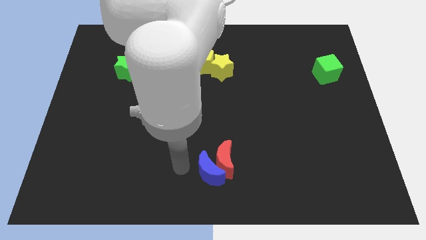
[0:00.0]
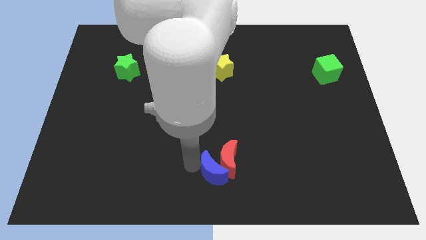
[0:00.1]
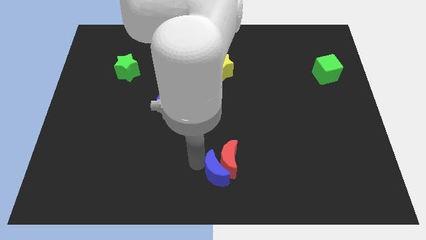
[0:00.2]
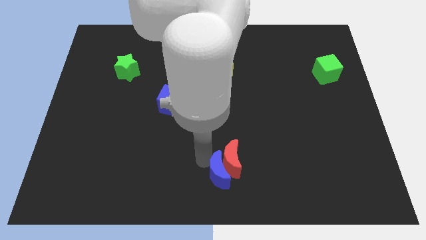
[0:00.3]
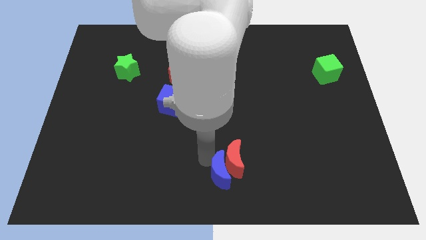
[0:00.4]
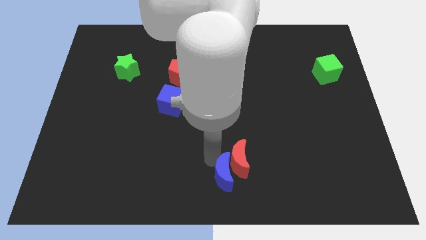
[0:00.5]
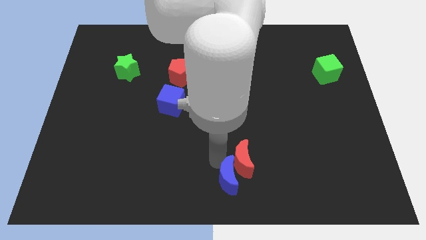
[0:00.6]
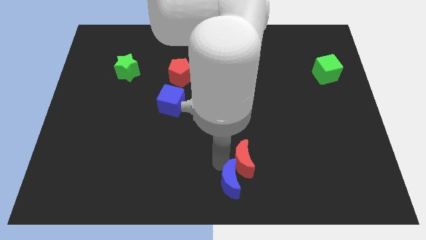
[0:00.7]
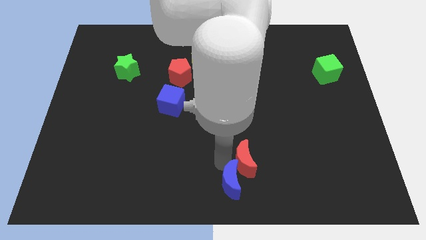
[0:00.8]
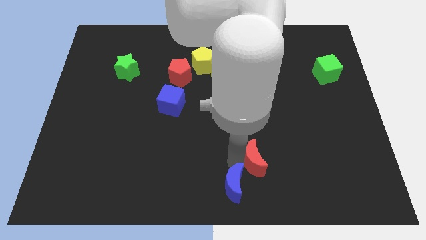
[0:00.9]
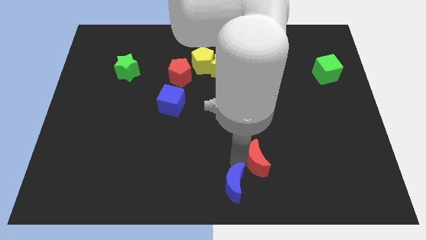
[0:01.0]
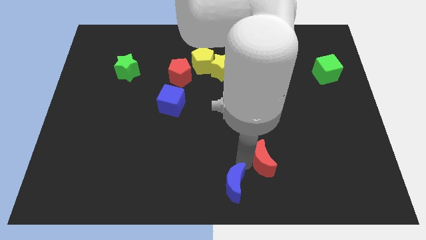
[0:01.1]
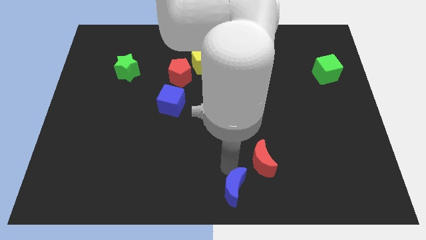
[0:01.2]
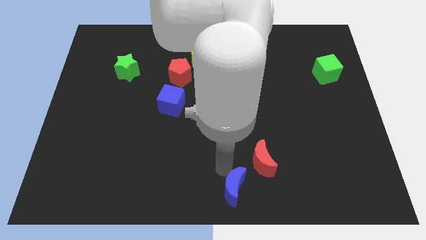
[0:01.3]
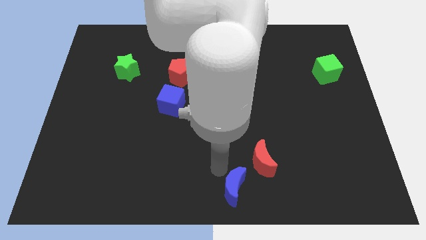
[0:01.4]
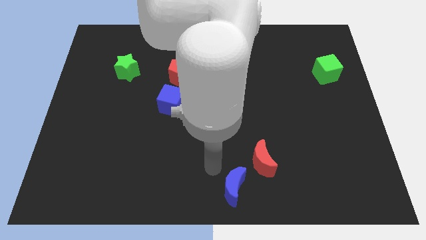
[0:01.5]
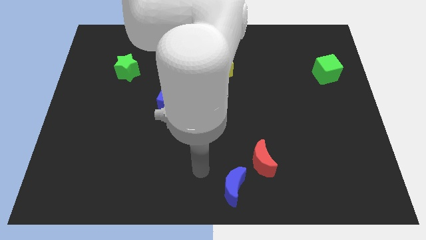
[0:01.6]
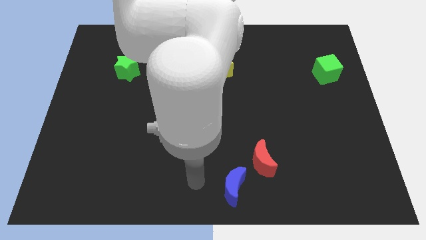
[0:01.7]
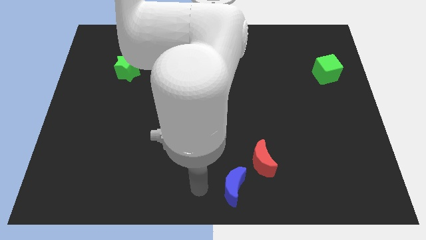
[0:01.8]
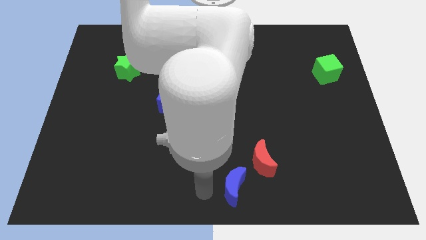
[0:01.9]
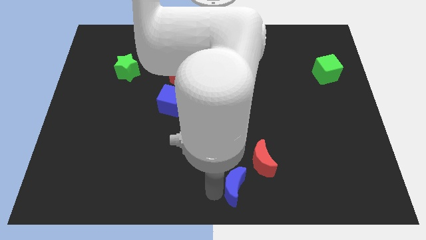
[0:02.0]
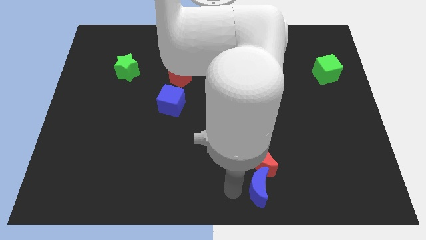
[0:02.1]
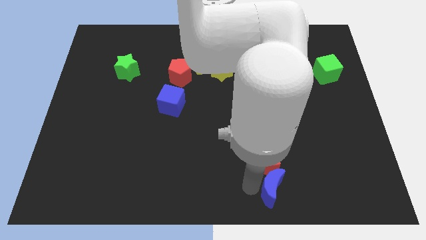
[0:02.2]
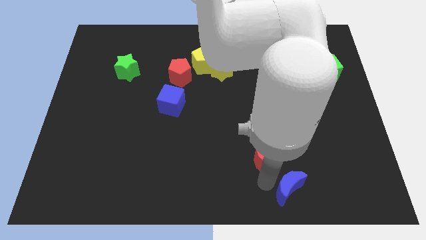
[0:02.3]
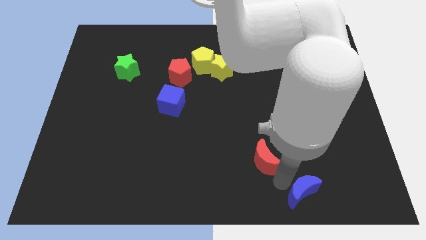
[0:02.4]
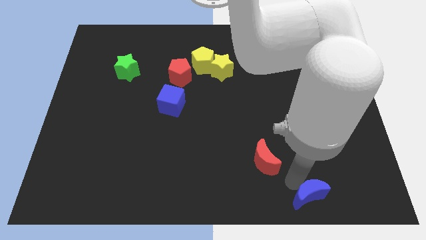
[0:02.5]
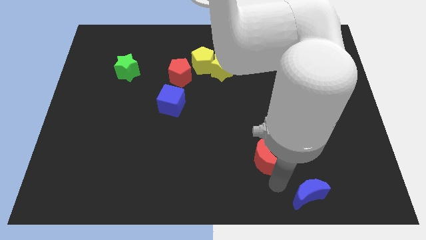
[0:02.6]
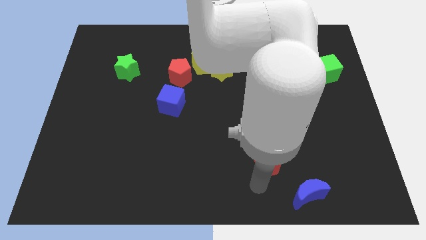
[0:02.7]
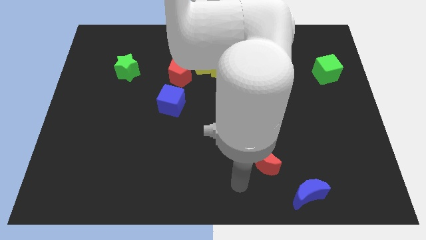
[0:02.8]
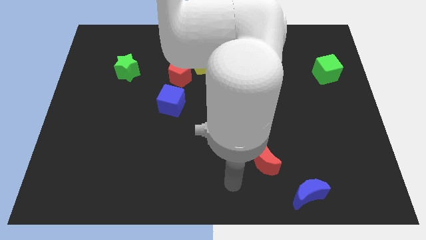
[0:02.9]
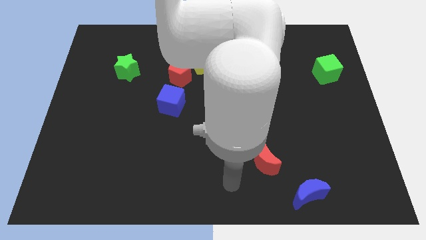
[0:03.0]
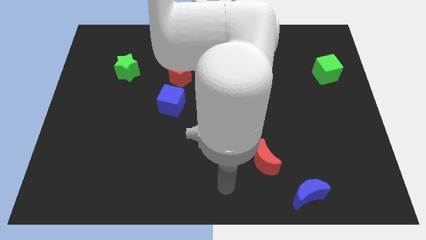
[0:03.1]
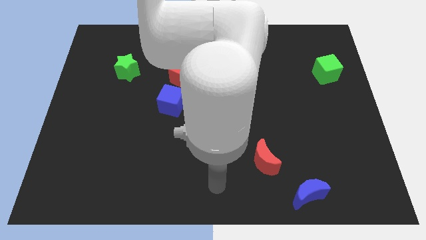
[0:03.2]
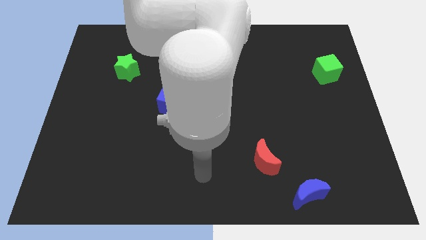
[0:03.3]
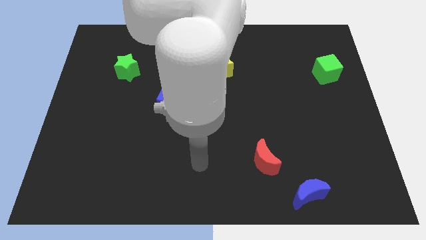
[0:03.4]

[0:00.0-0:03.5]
move the blue semicircle to the right side of the board

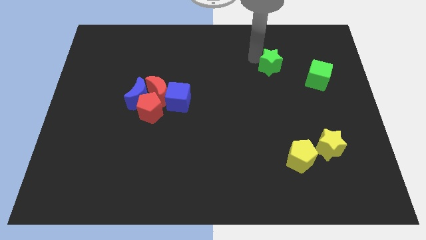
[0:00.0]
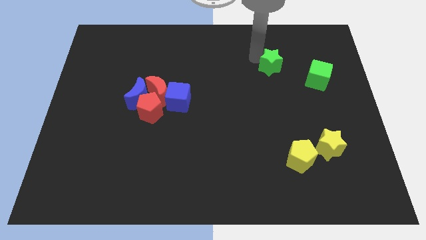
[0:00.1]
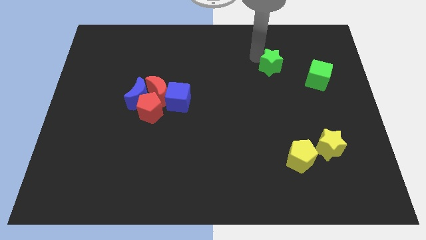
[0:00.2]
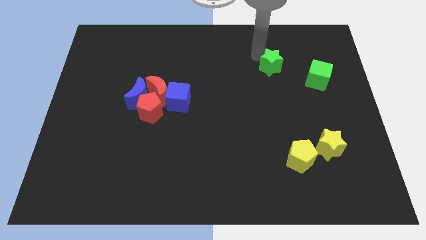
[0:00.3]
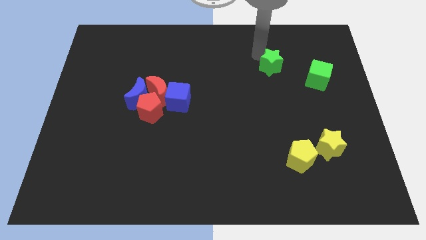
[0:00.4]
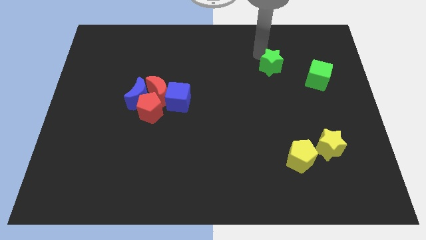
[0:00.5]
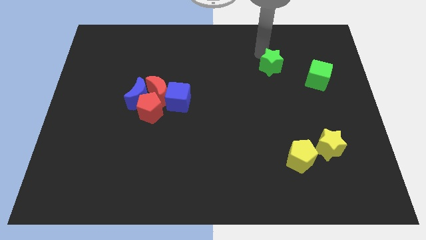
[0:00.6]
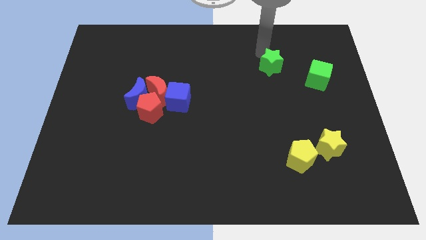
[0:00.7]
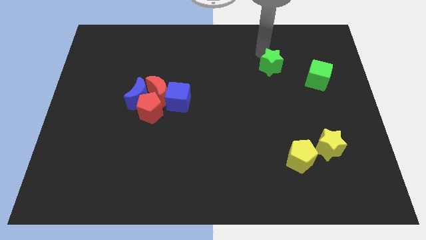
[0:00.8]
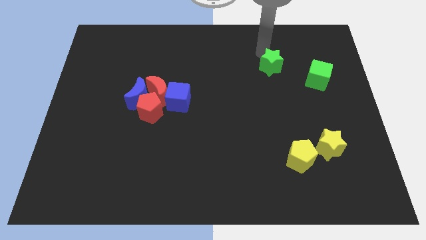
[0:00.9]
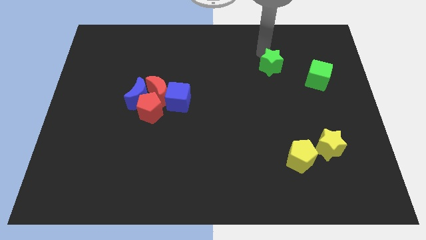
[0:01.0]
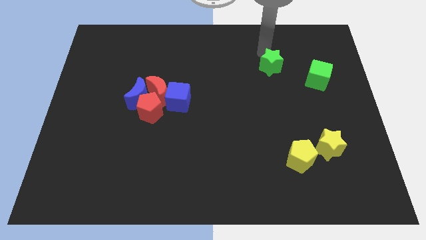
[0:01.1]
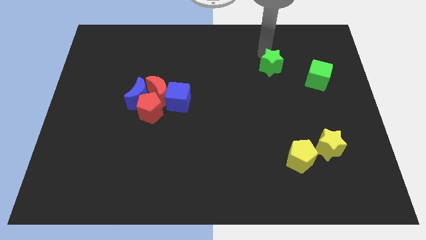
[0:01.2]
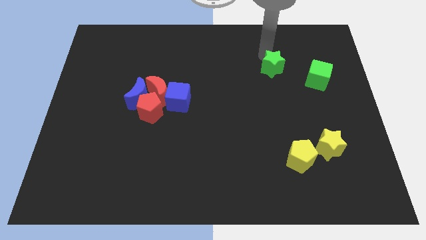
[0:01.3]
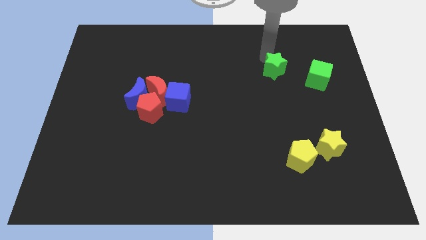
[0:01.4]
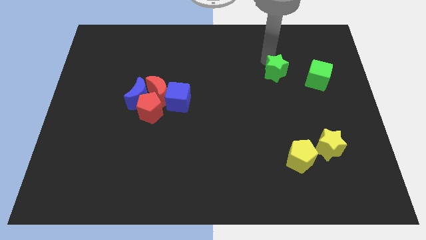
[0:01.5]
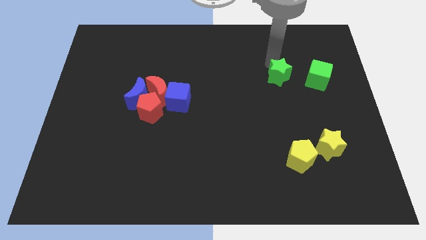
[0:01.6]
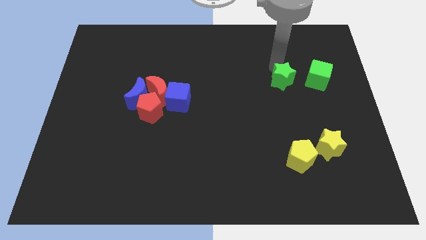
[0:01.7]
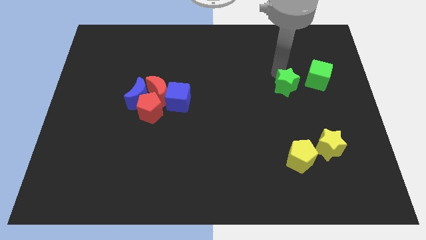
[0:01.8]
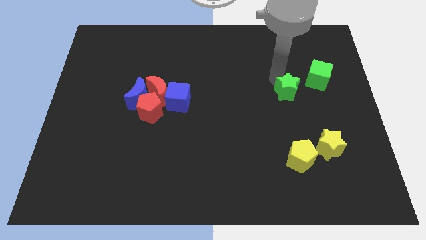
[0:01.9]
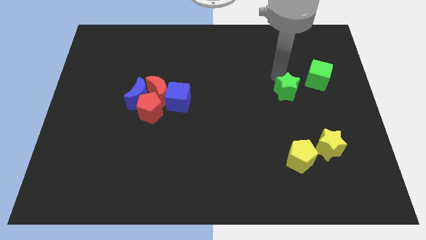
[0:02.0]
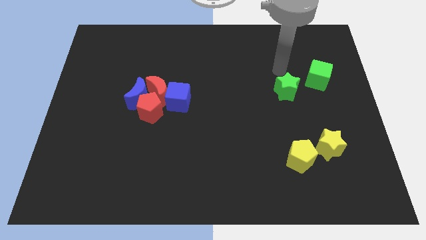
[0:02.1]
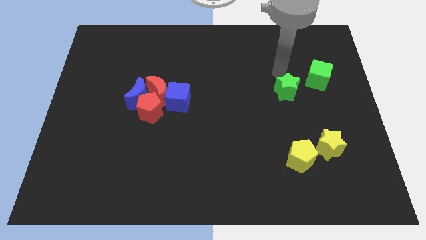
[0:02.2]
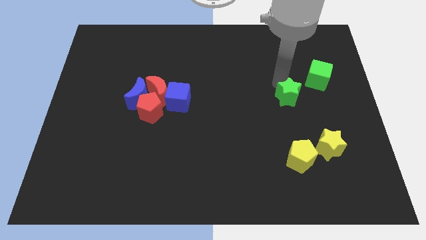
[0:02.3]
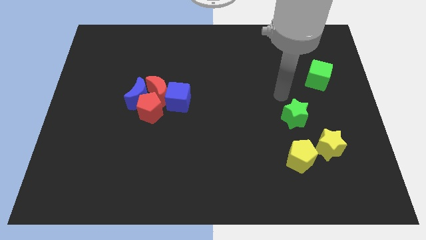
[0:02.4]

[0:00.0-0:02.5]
move the green star slightly down

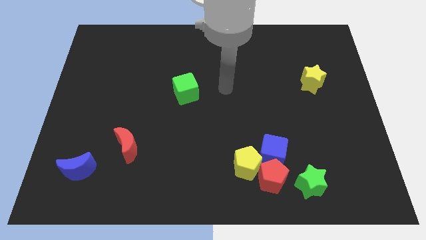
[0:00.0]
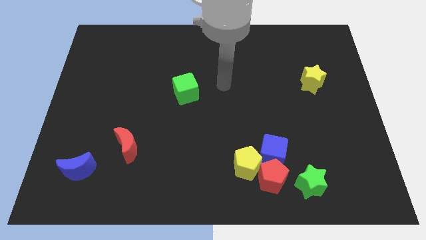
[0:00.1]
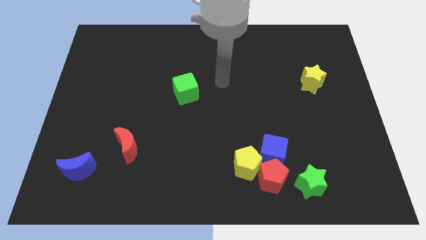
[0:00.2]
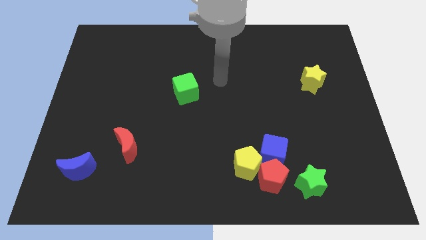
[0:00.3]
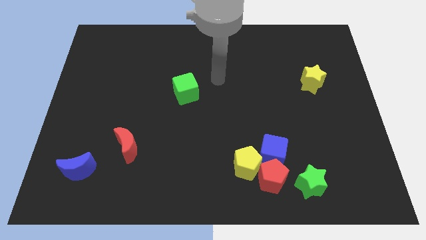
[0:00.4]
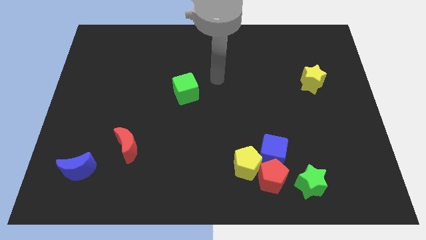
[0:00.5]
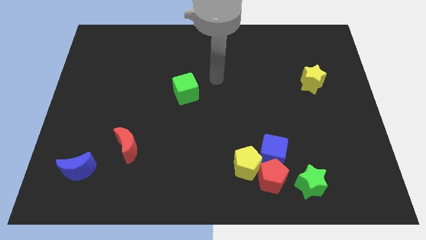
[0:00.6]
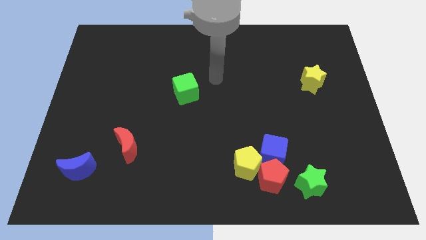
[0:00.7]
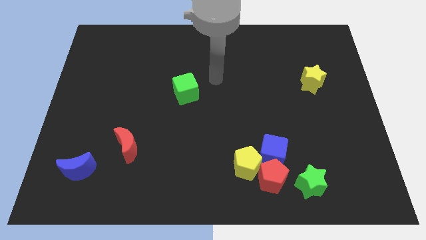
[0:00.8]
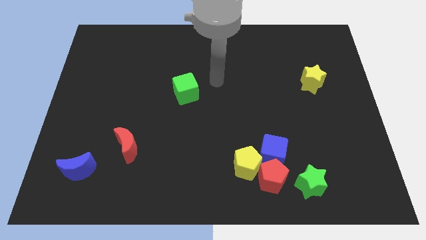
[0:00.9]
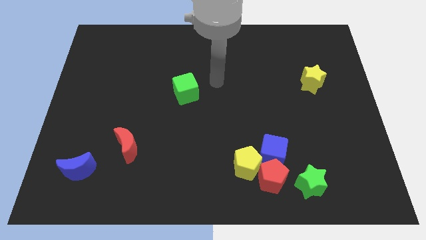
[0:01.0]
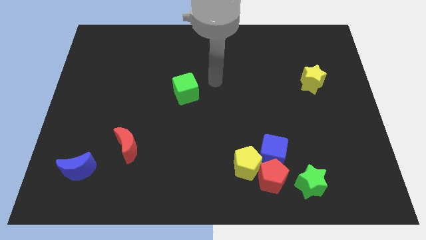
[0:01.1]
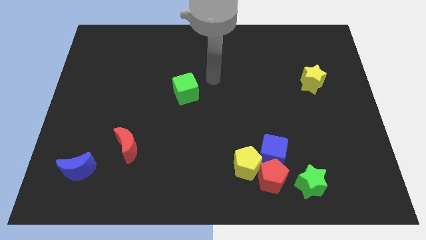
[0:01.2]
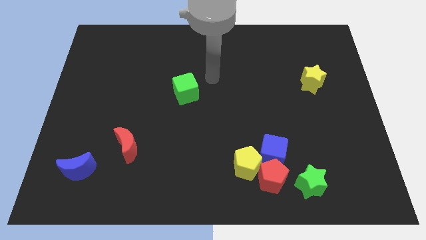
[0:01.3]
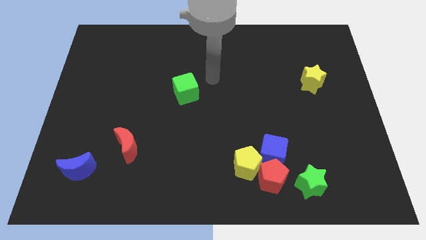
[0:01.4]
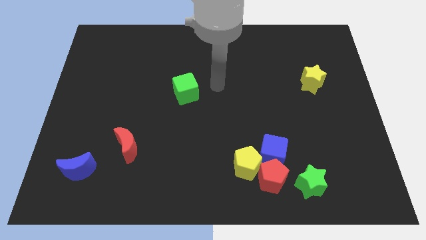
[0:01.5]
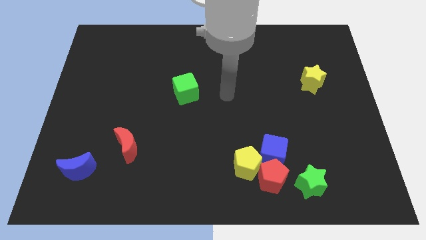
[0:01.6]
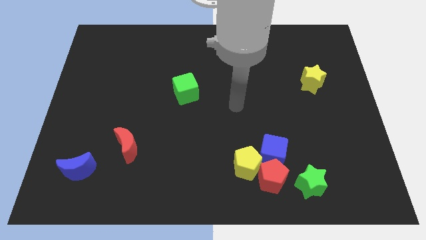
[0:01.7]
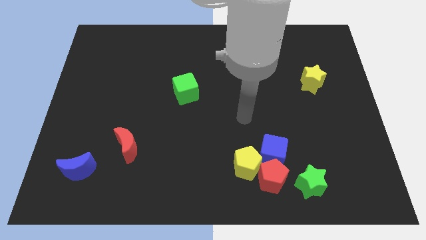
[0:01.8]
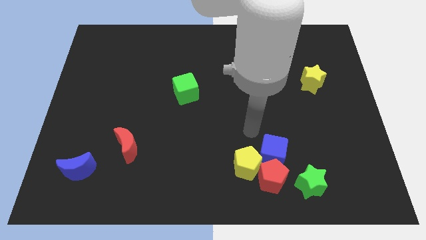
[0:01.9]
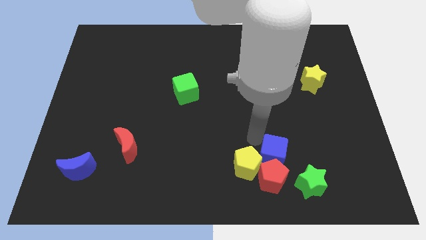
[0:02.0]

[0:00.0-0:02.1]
place your hand on the blue cube

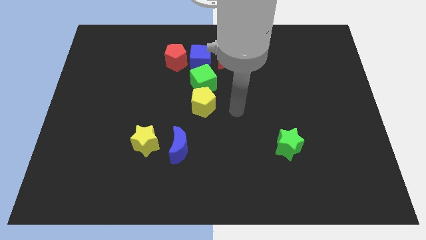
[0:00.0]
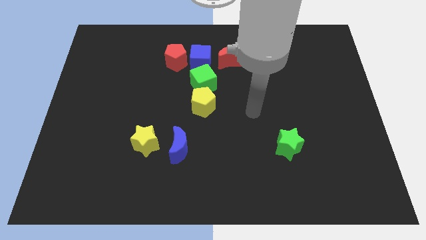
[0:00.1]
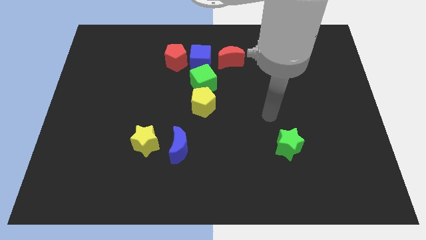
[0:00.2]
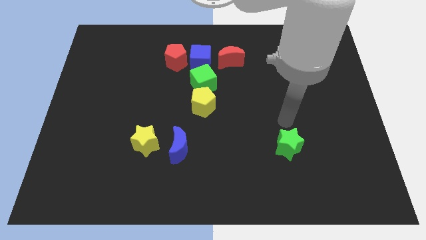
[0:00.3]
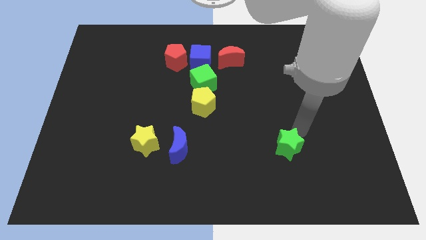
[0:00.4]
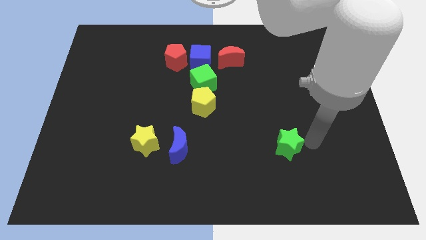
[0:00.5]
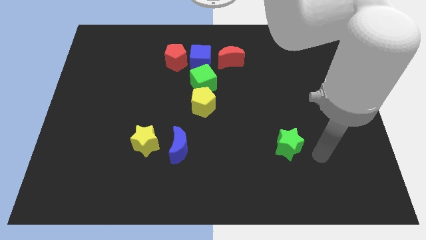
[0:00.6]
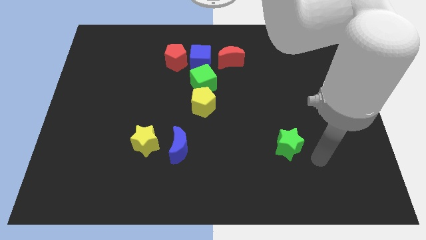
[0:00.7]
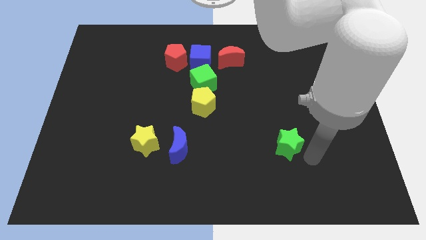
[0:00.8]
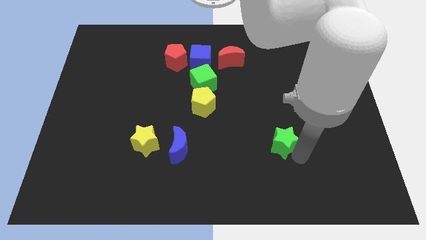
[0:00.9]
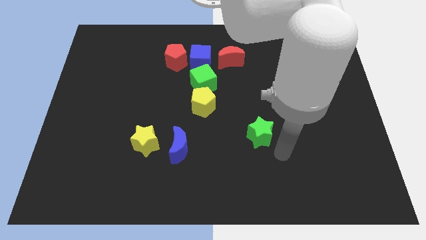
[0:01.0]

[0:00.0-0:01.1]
push the green star towards the yellow pentagon
